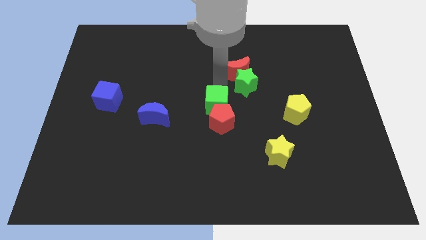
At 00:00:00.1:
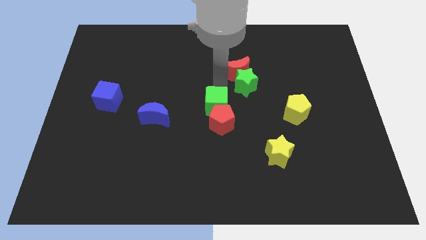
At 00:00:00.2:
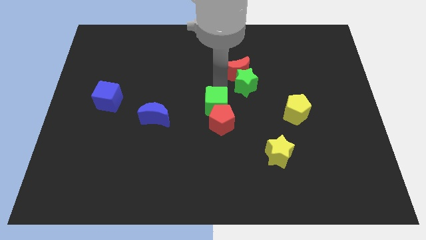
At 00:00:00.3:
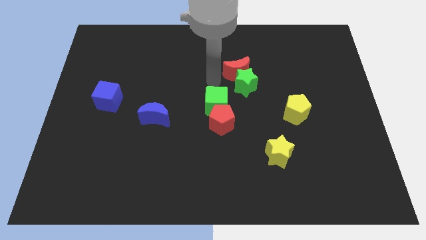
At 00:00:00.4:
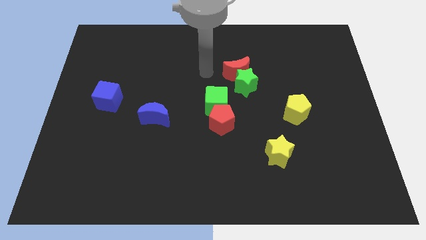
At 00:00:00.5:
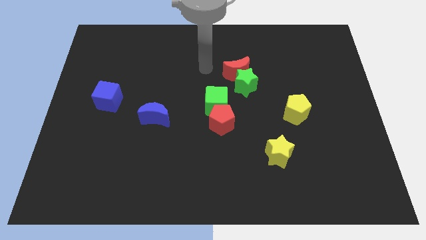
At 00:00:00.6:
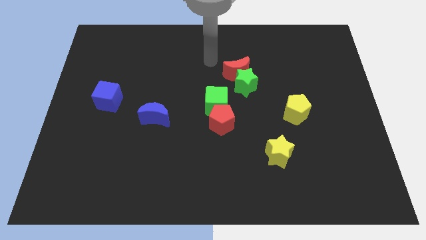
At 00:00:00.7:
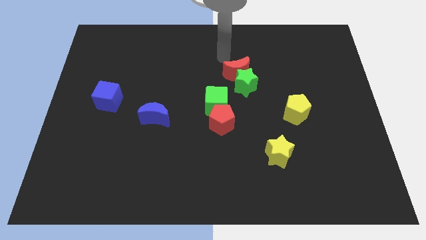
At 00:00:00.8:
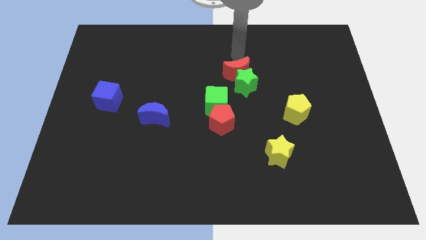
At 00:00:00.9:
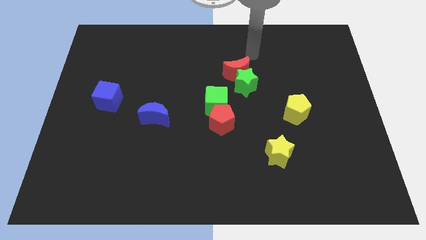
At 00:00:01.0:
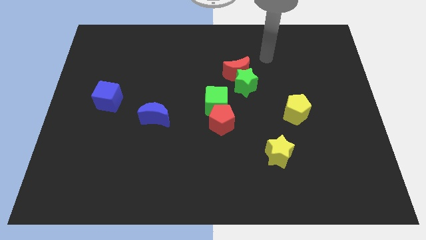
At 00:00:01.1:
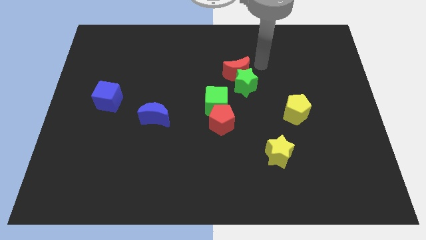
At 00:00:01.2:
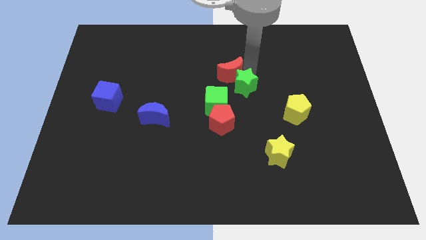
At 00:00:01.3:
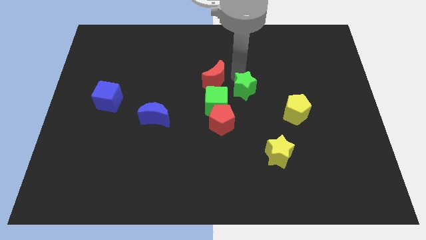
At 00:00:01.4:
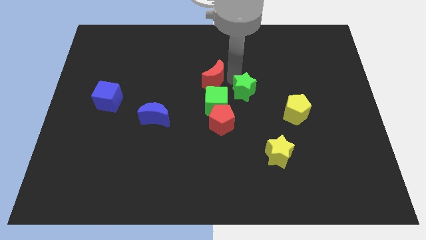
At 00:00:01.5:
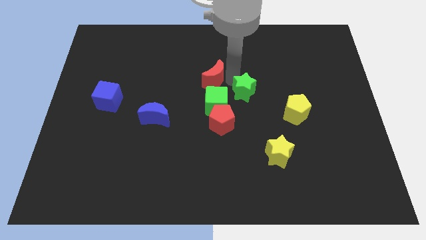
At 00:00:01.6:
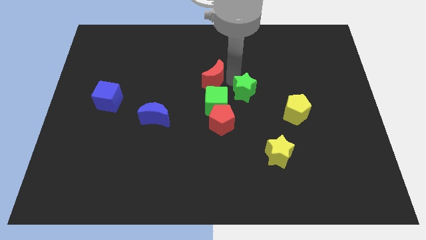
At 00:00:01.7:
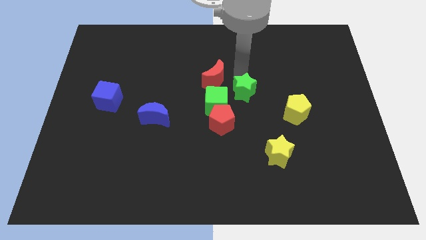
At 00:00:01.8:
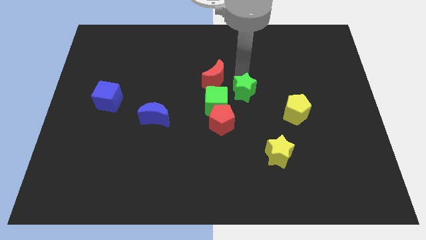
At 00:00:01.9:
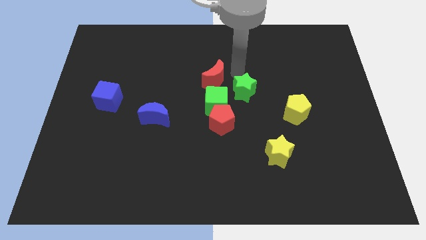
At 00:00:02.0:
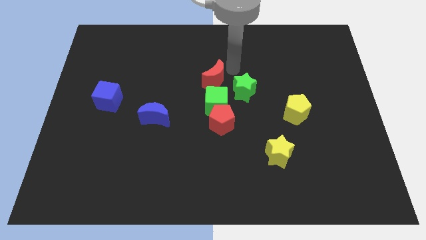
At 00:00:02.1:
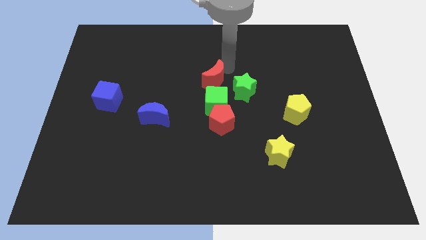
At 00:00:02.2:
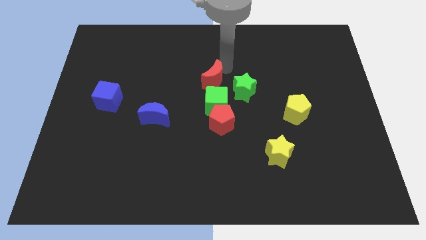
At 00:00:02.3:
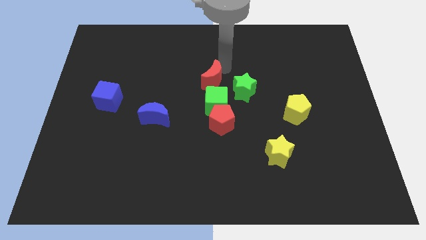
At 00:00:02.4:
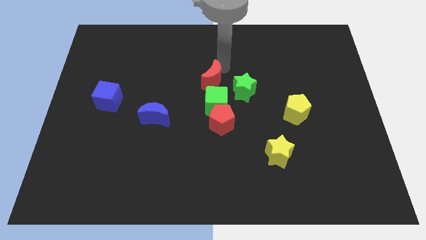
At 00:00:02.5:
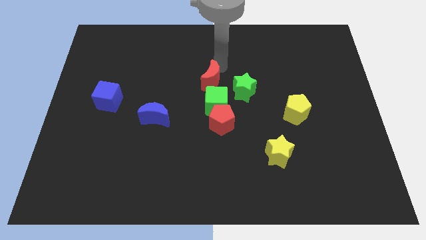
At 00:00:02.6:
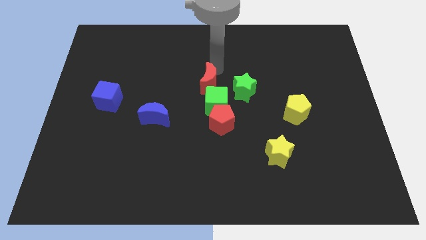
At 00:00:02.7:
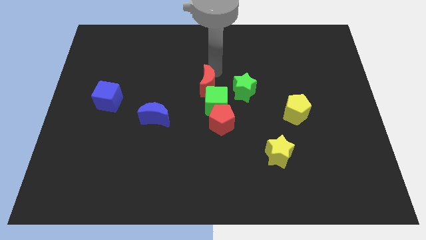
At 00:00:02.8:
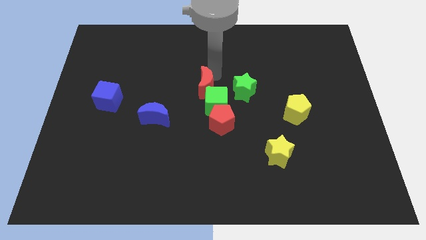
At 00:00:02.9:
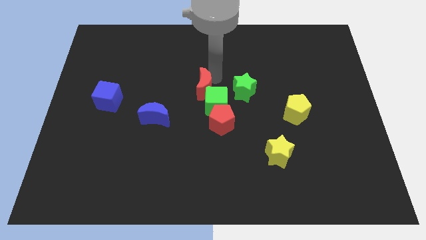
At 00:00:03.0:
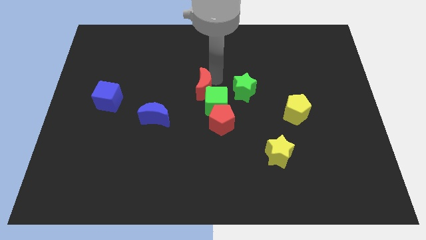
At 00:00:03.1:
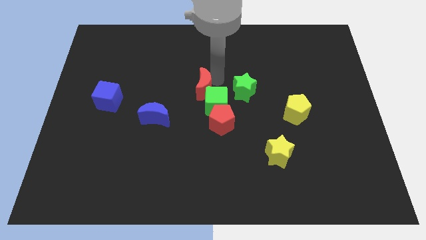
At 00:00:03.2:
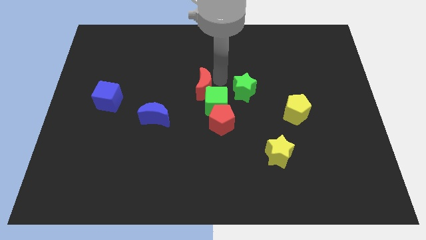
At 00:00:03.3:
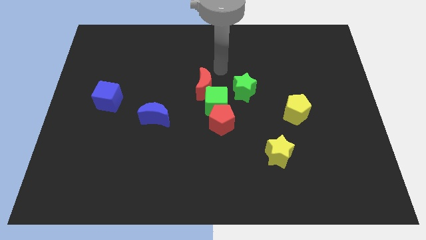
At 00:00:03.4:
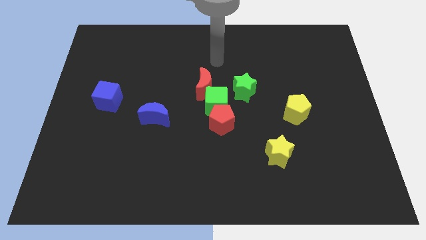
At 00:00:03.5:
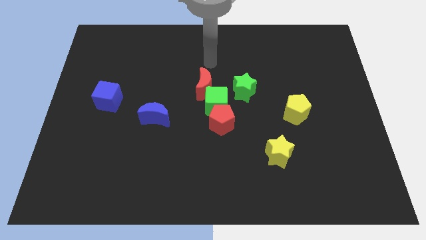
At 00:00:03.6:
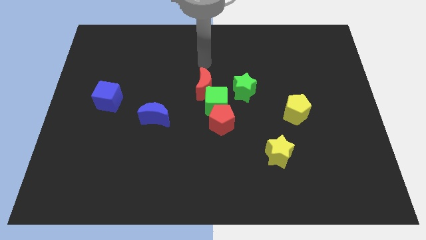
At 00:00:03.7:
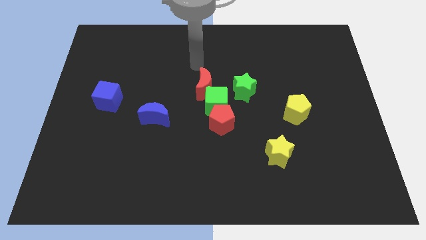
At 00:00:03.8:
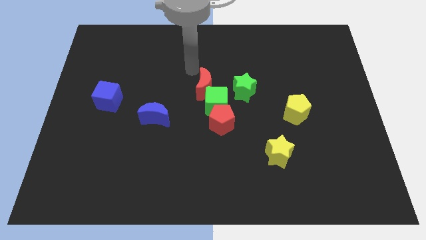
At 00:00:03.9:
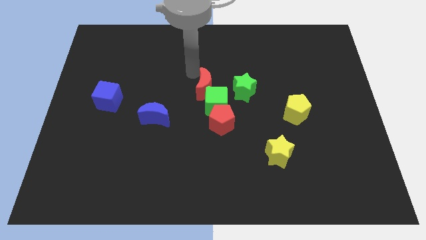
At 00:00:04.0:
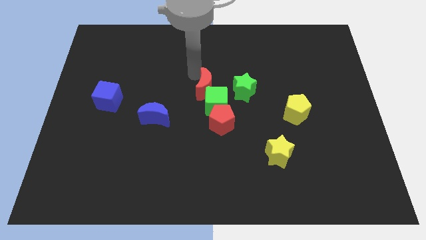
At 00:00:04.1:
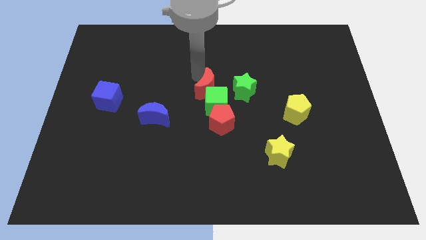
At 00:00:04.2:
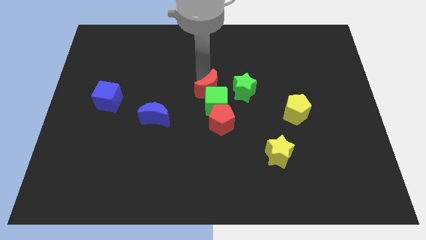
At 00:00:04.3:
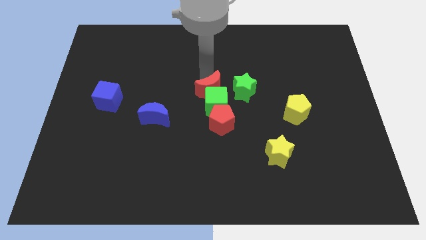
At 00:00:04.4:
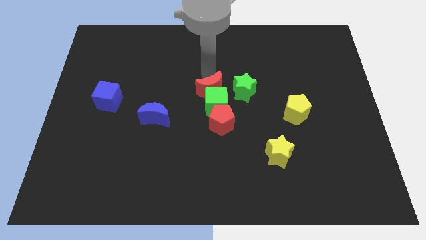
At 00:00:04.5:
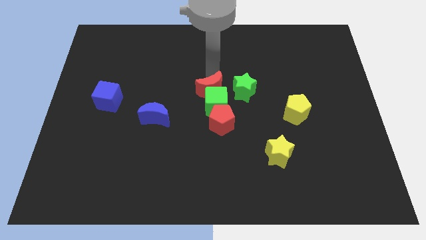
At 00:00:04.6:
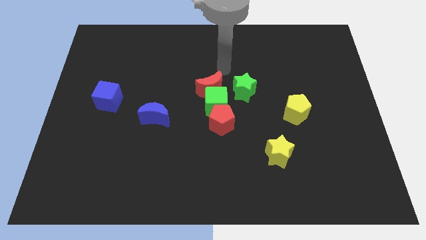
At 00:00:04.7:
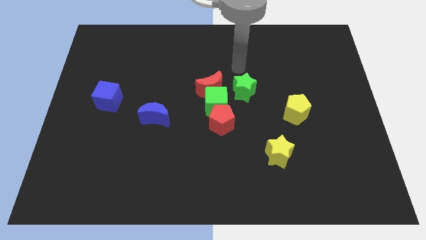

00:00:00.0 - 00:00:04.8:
move the red moon in a vertical line above the green cube

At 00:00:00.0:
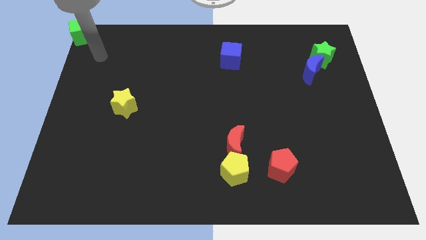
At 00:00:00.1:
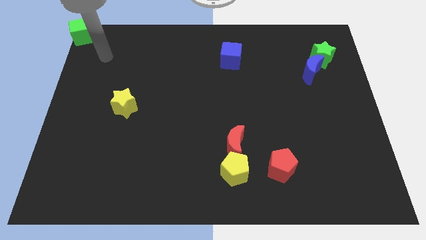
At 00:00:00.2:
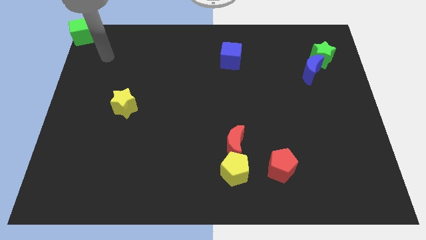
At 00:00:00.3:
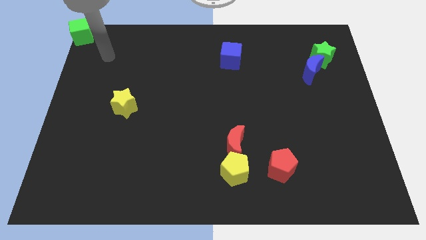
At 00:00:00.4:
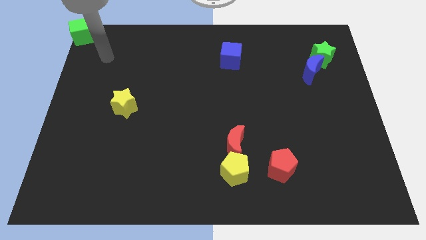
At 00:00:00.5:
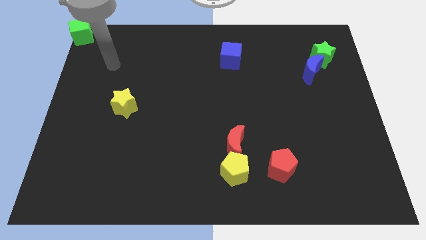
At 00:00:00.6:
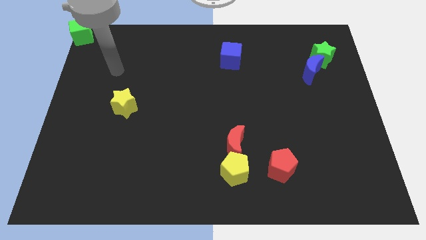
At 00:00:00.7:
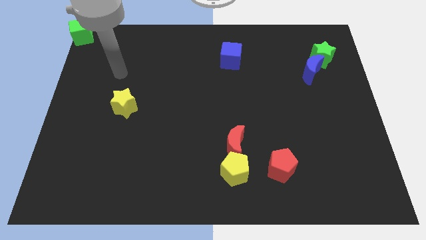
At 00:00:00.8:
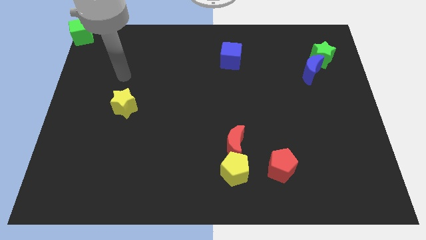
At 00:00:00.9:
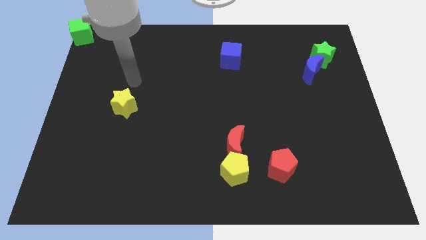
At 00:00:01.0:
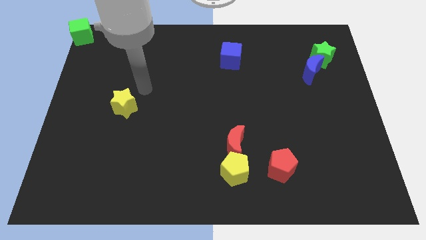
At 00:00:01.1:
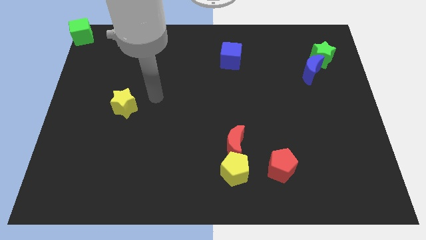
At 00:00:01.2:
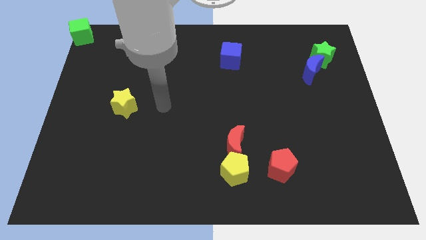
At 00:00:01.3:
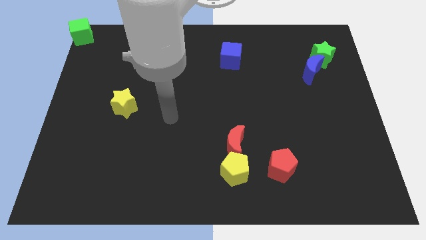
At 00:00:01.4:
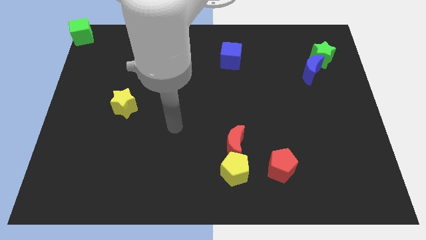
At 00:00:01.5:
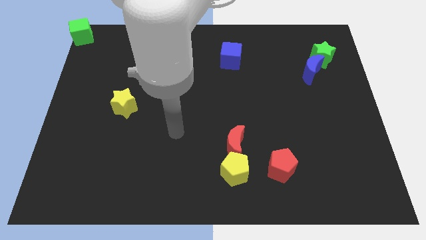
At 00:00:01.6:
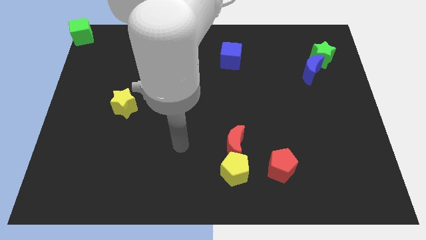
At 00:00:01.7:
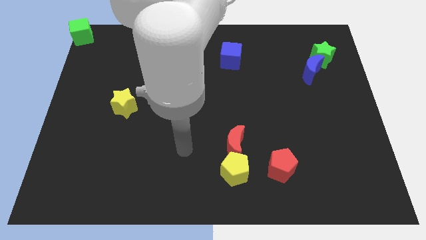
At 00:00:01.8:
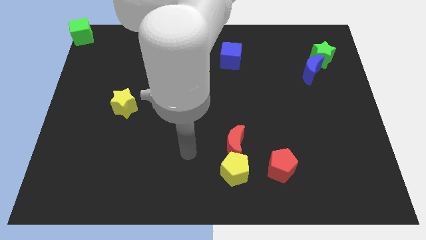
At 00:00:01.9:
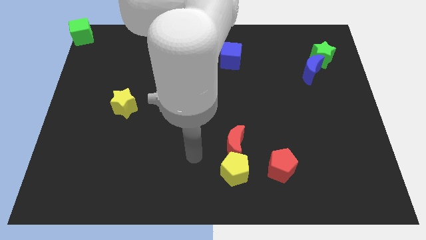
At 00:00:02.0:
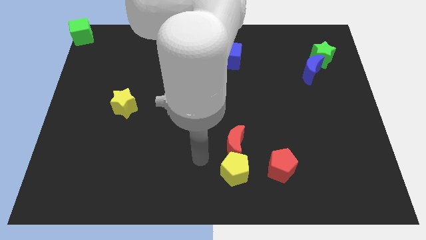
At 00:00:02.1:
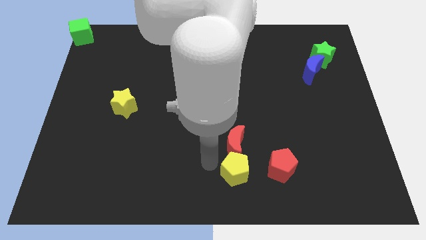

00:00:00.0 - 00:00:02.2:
point the arm to the left of the yellow pentagon

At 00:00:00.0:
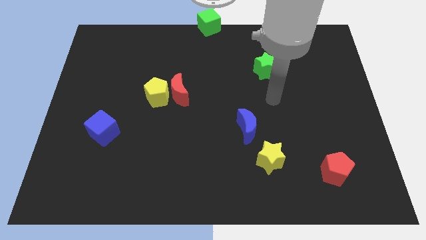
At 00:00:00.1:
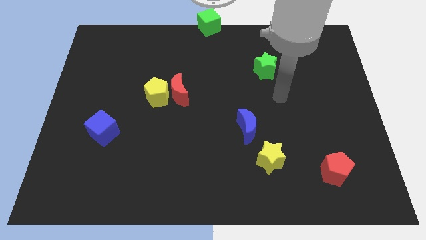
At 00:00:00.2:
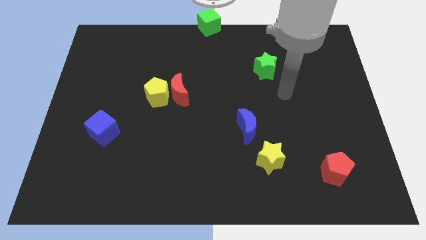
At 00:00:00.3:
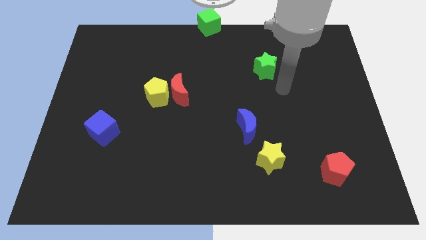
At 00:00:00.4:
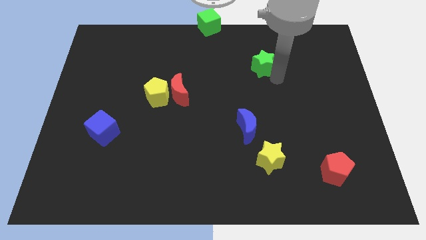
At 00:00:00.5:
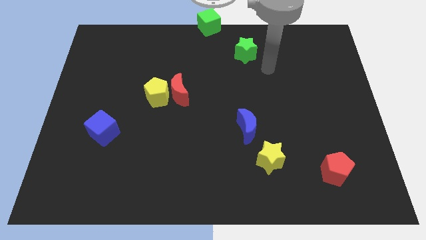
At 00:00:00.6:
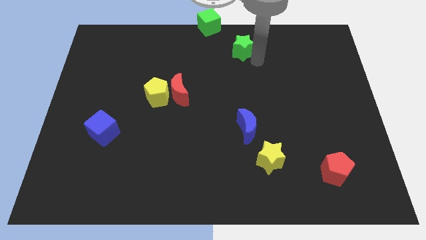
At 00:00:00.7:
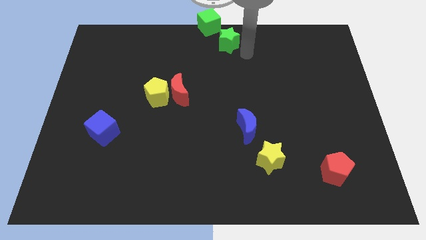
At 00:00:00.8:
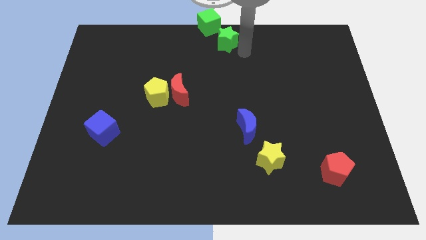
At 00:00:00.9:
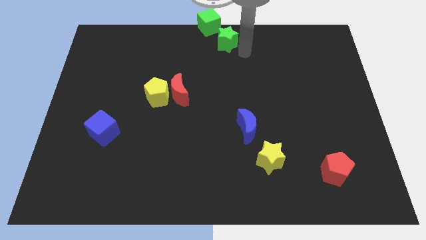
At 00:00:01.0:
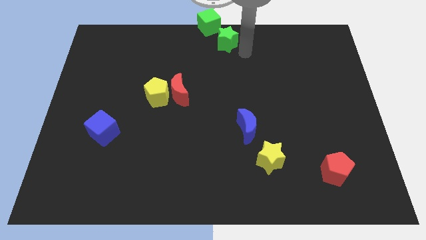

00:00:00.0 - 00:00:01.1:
push the green star towards the green cube

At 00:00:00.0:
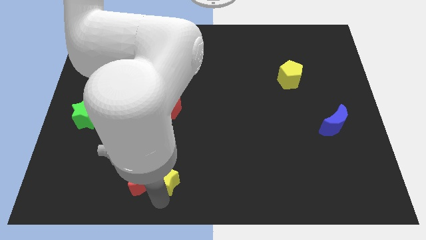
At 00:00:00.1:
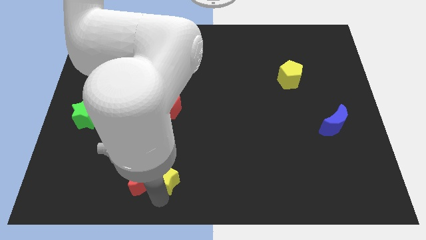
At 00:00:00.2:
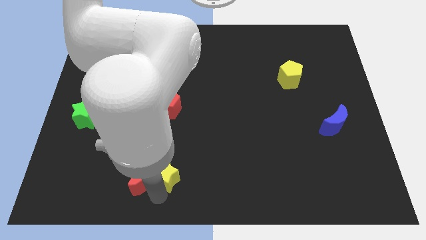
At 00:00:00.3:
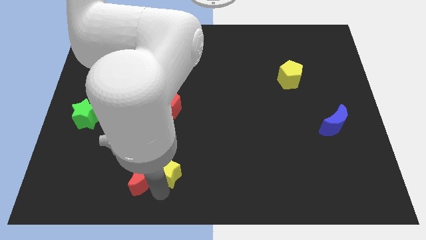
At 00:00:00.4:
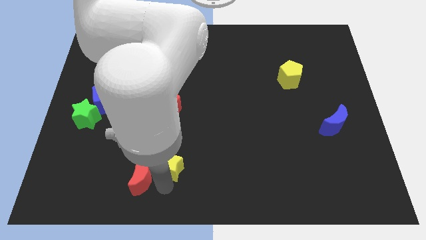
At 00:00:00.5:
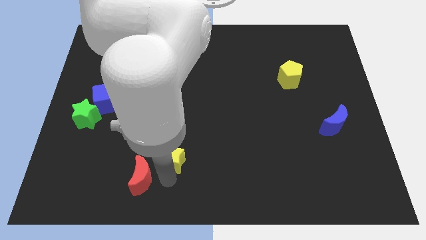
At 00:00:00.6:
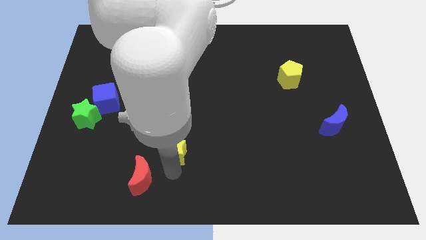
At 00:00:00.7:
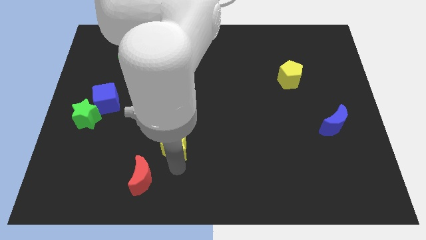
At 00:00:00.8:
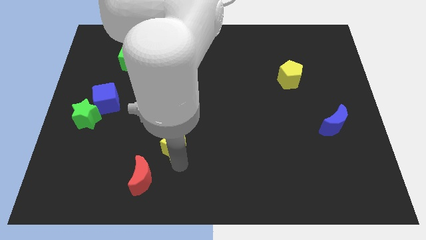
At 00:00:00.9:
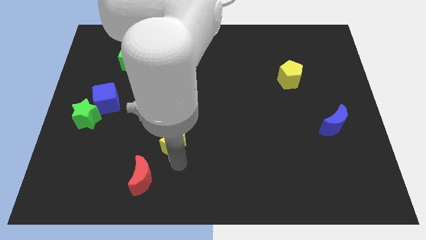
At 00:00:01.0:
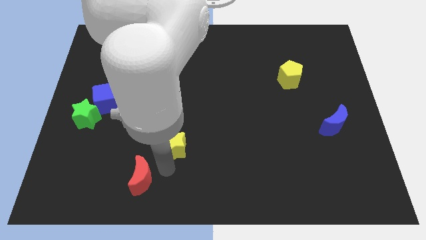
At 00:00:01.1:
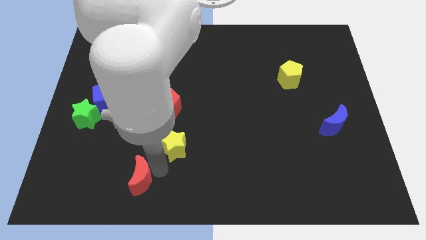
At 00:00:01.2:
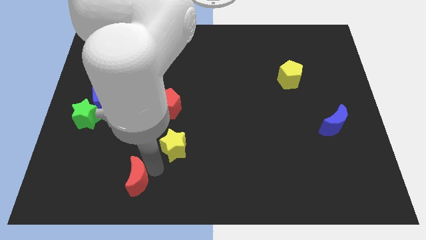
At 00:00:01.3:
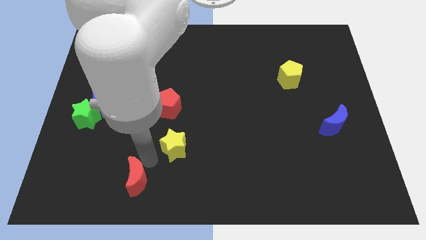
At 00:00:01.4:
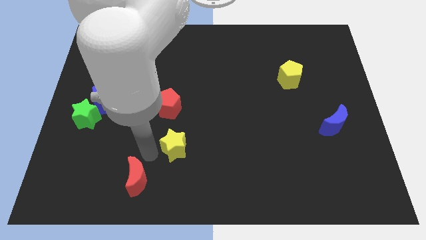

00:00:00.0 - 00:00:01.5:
move the yellow star below the red pentagon
